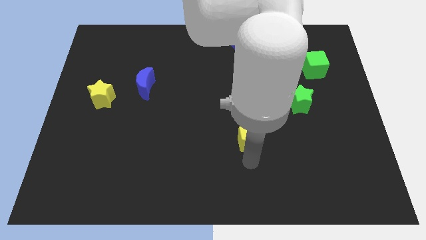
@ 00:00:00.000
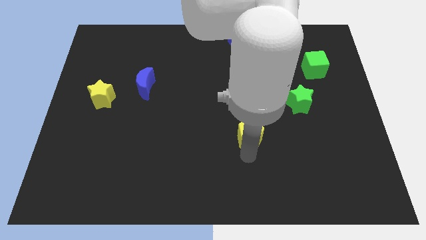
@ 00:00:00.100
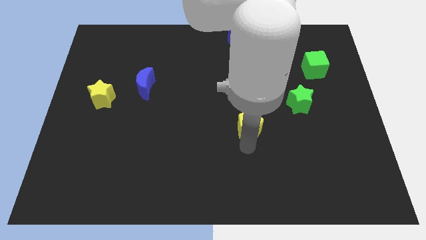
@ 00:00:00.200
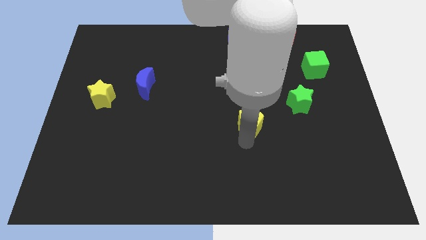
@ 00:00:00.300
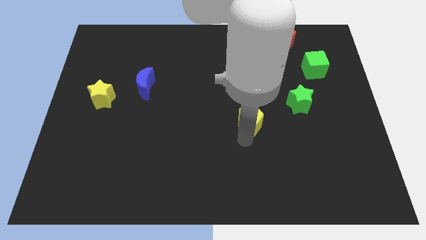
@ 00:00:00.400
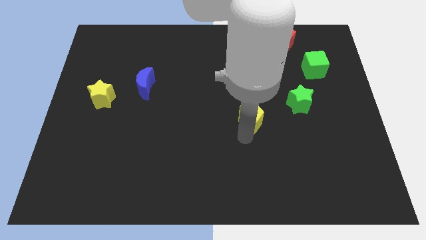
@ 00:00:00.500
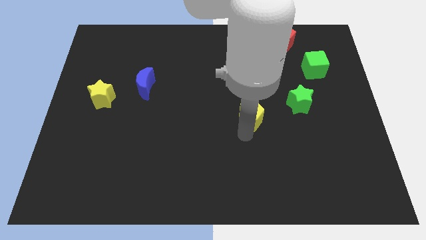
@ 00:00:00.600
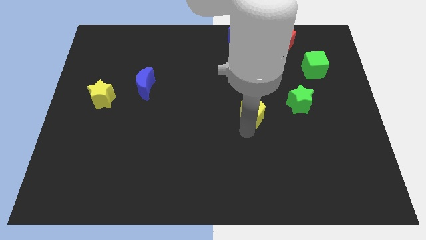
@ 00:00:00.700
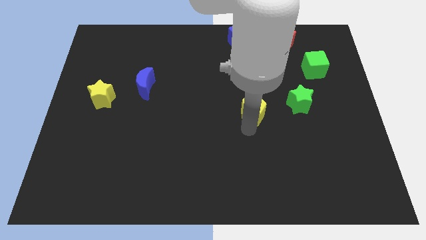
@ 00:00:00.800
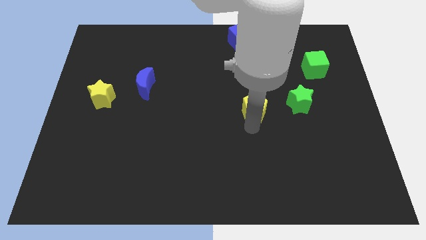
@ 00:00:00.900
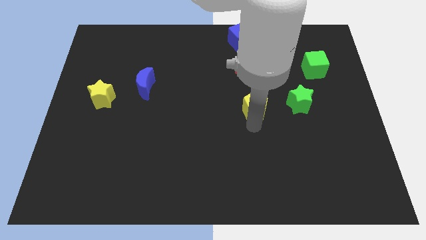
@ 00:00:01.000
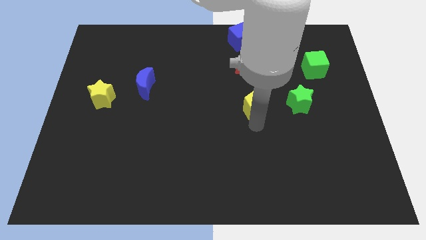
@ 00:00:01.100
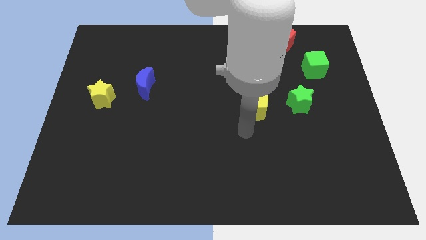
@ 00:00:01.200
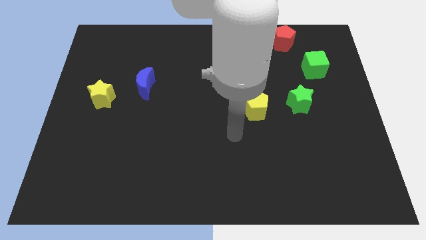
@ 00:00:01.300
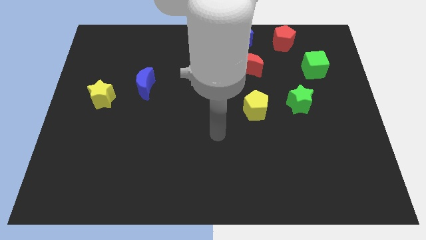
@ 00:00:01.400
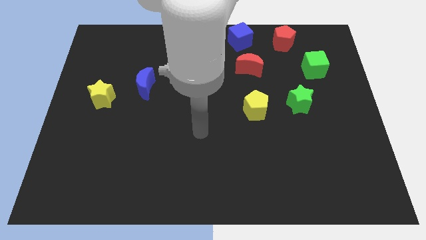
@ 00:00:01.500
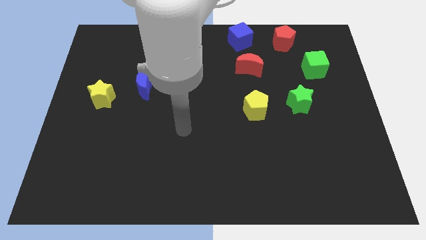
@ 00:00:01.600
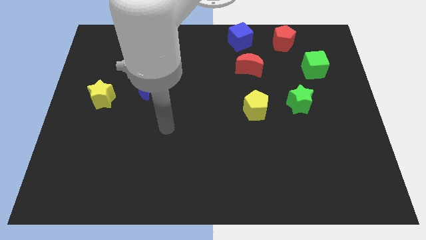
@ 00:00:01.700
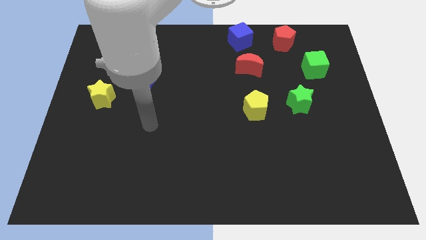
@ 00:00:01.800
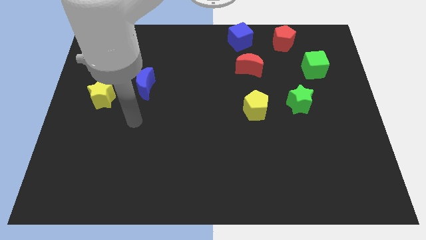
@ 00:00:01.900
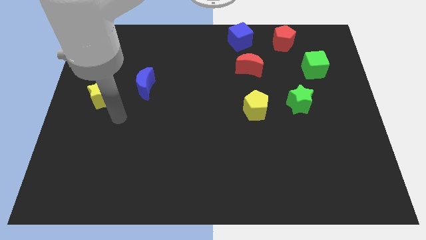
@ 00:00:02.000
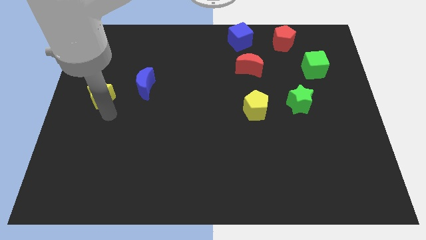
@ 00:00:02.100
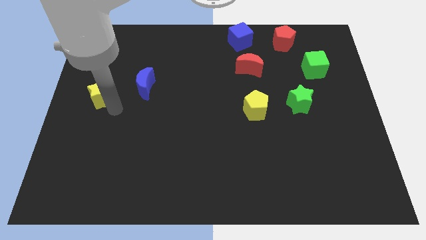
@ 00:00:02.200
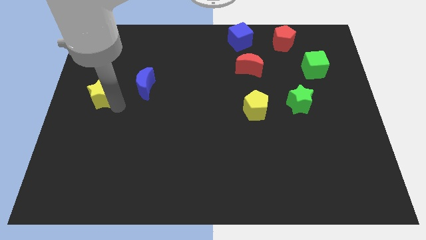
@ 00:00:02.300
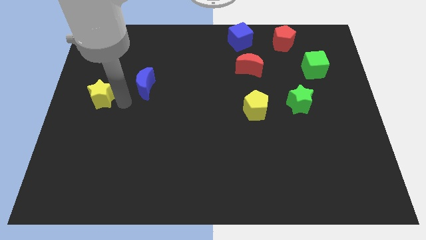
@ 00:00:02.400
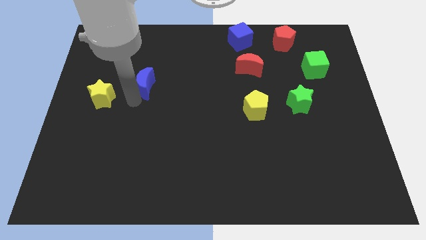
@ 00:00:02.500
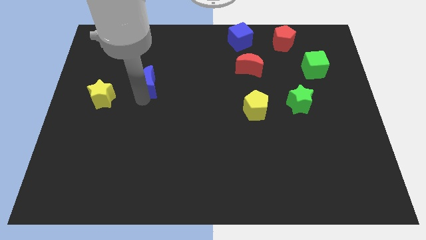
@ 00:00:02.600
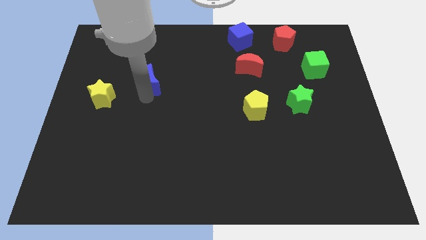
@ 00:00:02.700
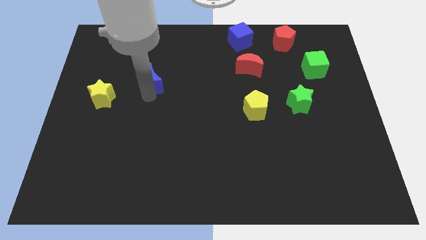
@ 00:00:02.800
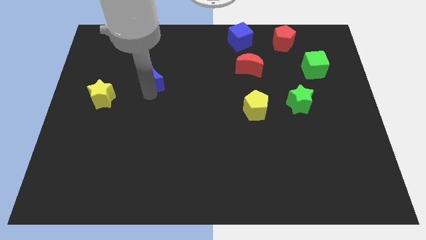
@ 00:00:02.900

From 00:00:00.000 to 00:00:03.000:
move the arm away from the yellow pentagon

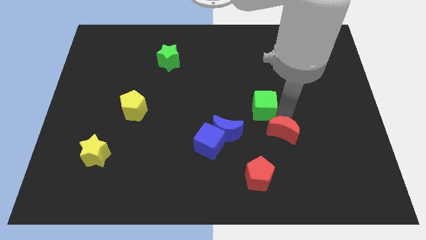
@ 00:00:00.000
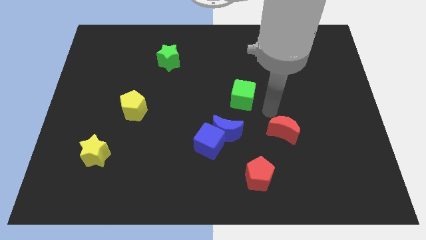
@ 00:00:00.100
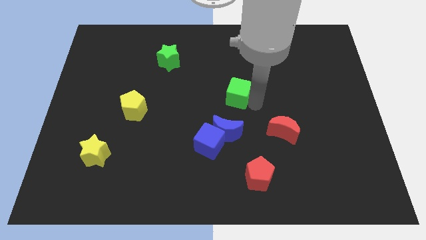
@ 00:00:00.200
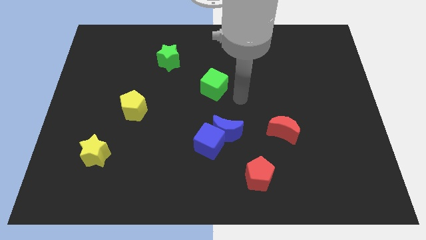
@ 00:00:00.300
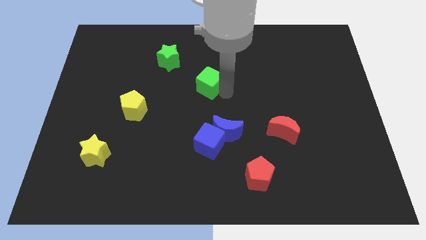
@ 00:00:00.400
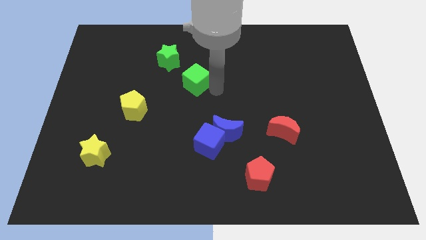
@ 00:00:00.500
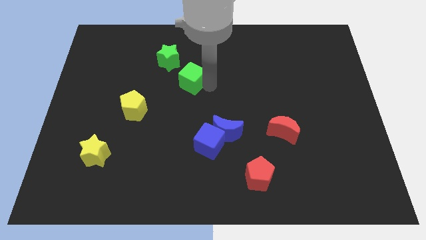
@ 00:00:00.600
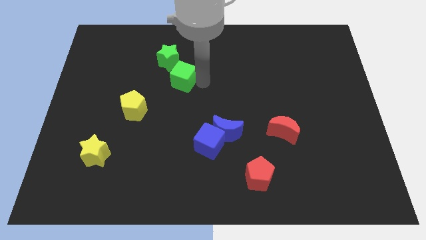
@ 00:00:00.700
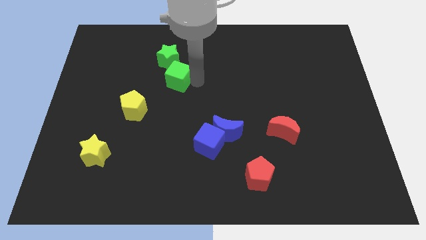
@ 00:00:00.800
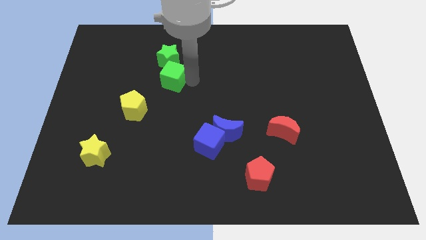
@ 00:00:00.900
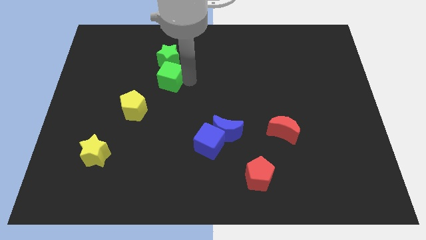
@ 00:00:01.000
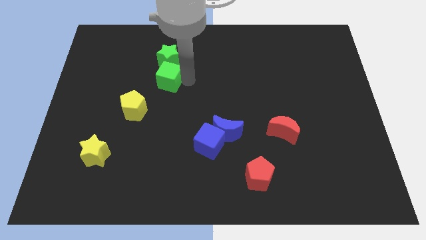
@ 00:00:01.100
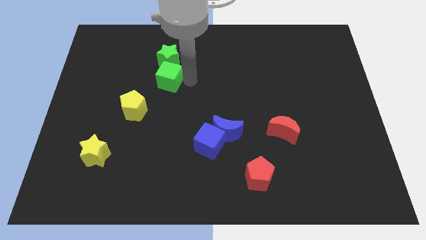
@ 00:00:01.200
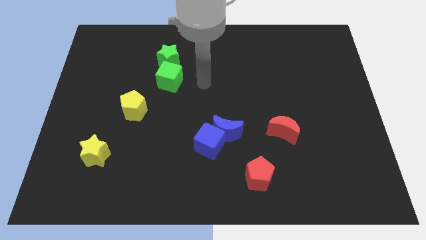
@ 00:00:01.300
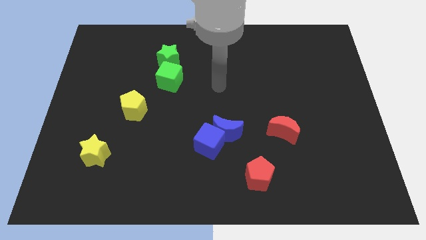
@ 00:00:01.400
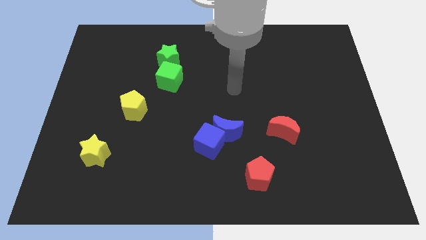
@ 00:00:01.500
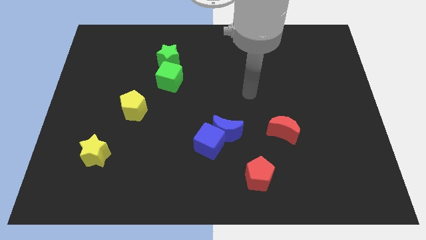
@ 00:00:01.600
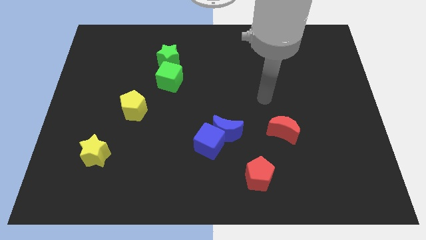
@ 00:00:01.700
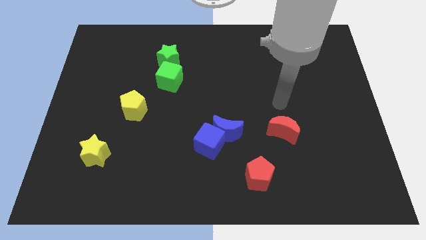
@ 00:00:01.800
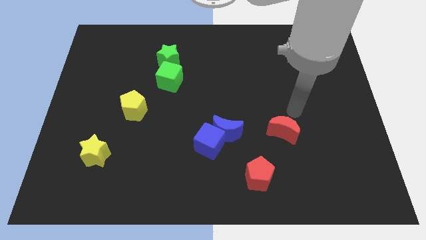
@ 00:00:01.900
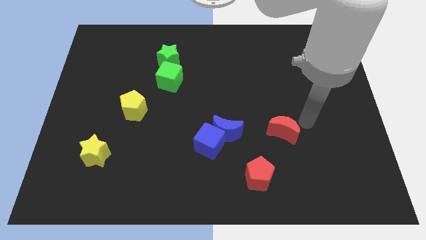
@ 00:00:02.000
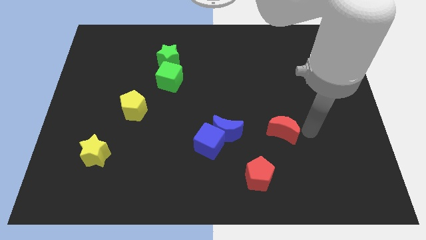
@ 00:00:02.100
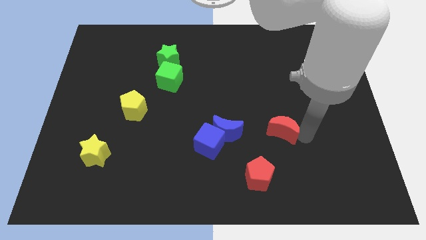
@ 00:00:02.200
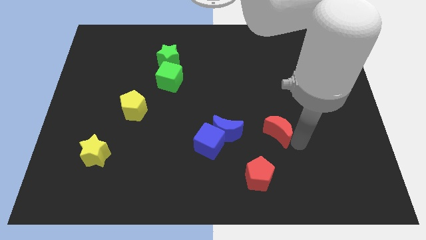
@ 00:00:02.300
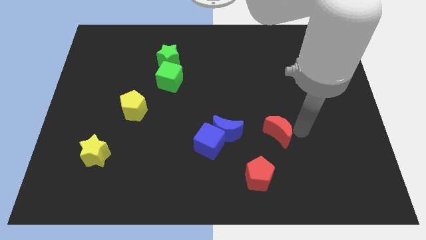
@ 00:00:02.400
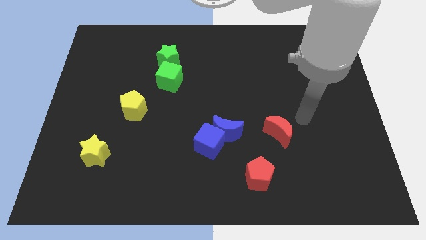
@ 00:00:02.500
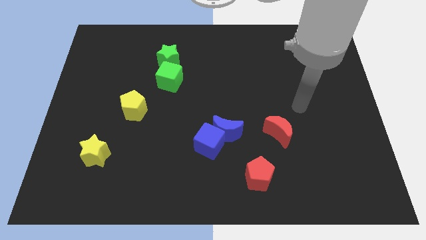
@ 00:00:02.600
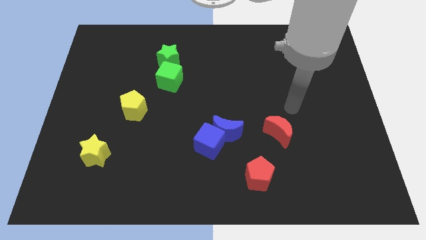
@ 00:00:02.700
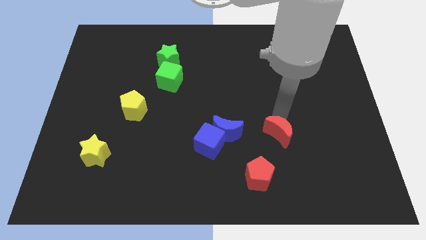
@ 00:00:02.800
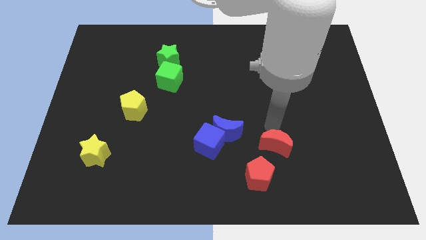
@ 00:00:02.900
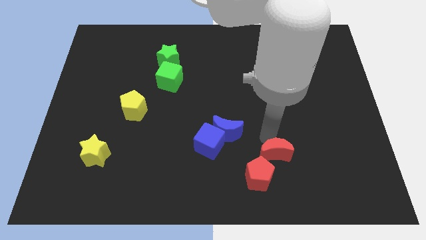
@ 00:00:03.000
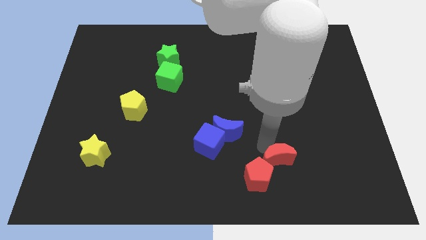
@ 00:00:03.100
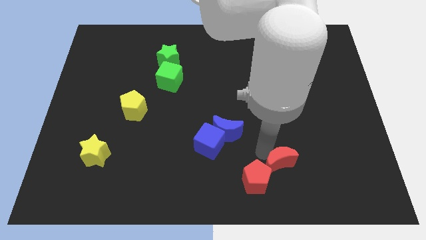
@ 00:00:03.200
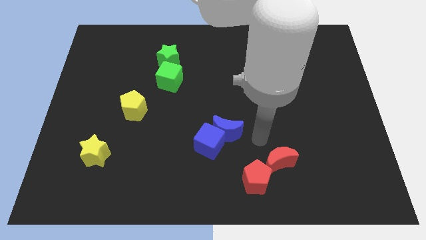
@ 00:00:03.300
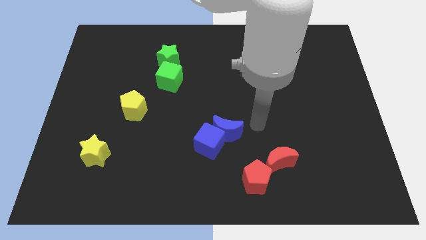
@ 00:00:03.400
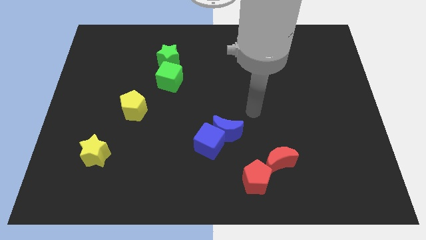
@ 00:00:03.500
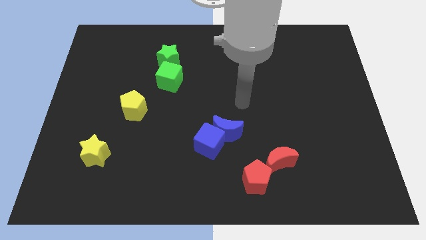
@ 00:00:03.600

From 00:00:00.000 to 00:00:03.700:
place the green cube below the green star

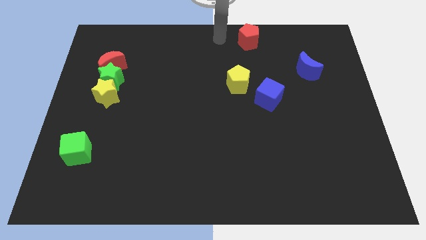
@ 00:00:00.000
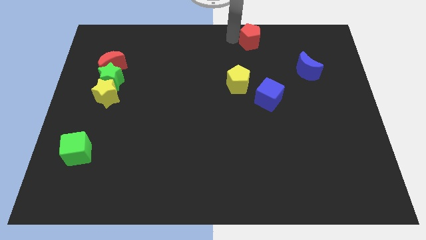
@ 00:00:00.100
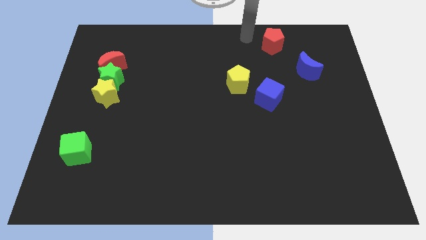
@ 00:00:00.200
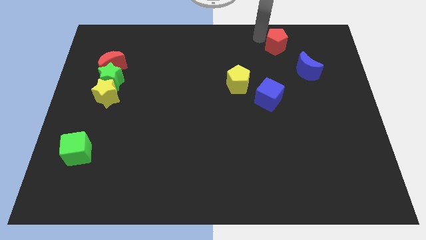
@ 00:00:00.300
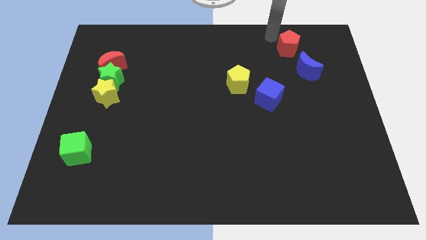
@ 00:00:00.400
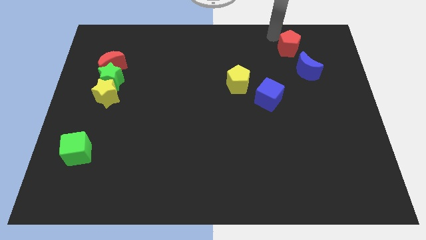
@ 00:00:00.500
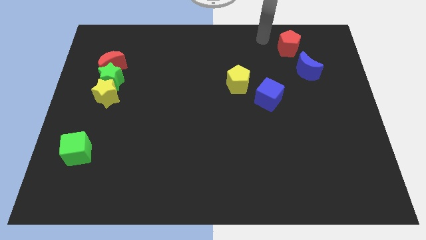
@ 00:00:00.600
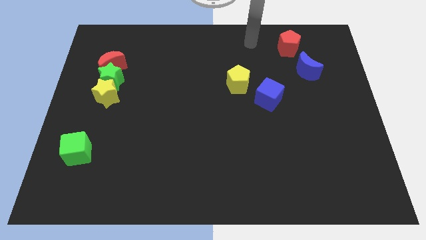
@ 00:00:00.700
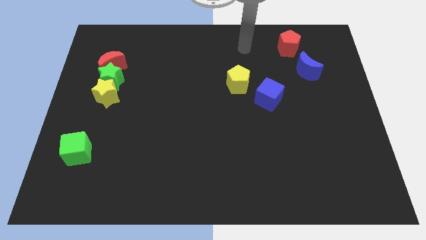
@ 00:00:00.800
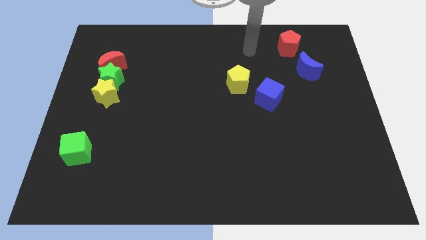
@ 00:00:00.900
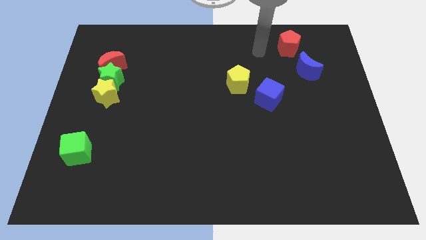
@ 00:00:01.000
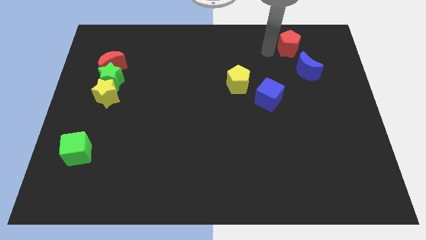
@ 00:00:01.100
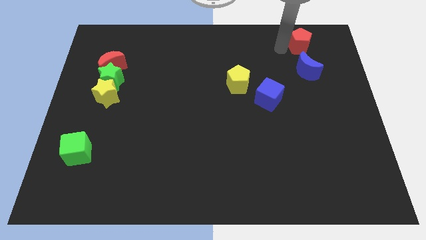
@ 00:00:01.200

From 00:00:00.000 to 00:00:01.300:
put the red pentagon above the blue crescent

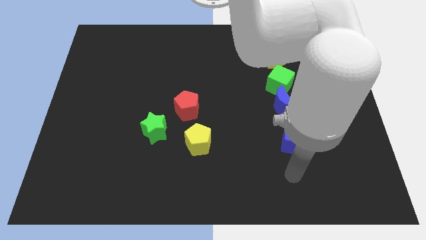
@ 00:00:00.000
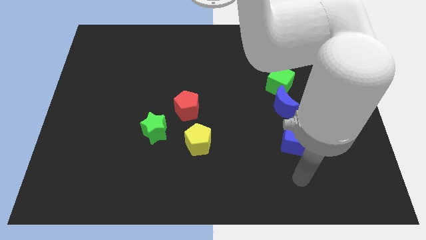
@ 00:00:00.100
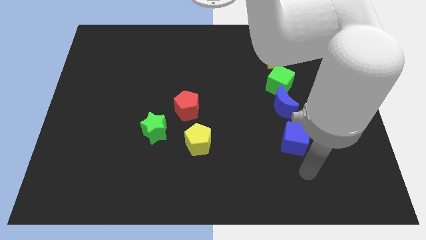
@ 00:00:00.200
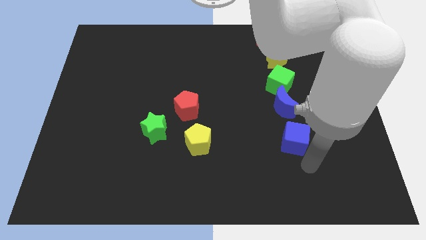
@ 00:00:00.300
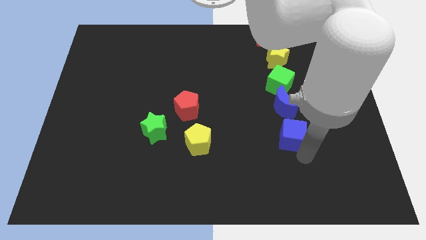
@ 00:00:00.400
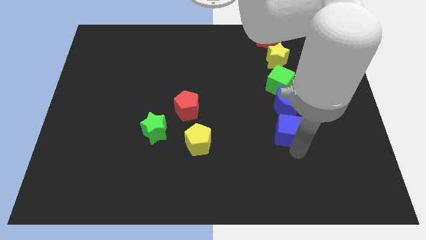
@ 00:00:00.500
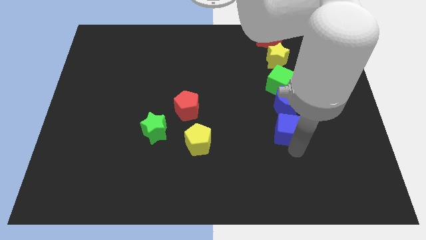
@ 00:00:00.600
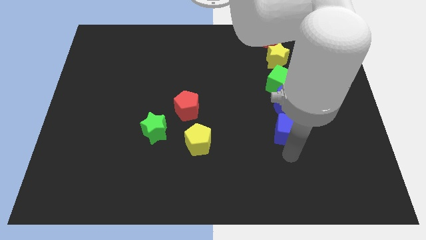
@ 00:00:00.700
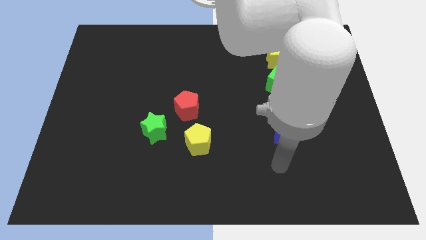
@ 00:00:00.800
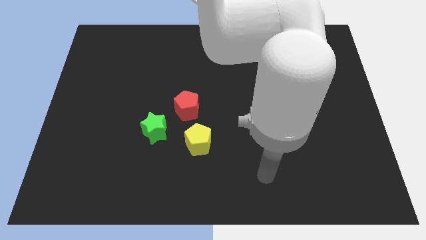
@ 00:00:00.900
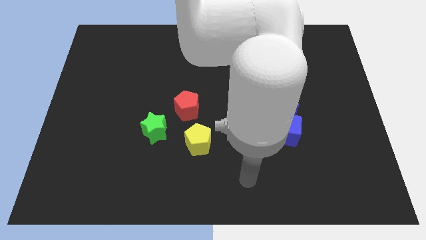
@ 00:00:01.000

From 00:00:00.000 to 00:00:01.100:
place the blue cube below the blue crescent
